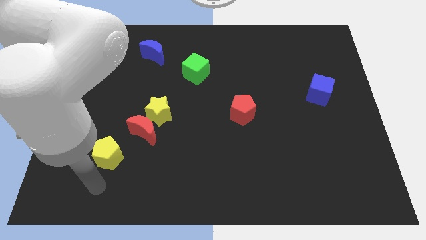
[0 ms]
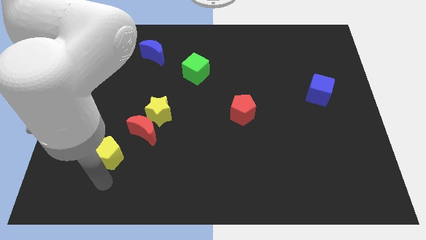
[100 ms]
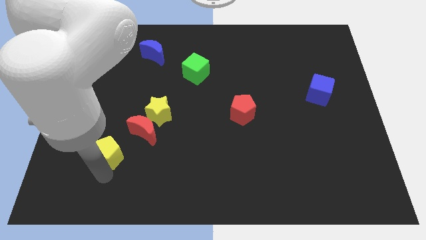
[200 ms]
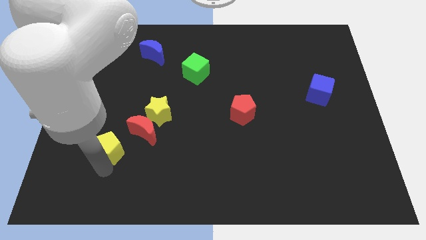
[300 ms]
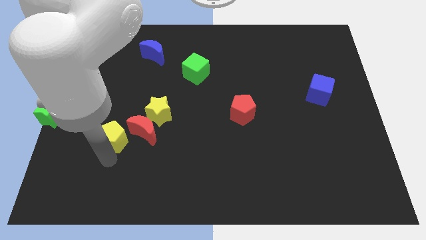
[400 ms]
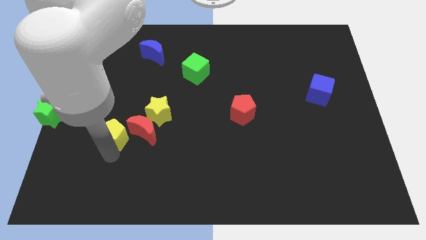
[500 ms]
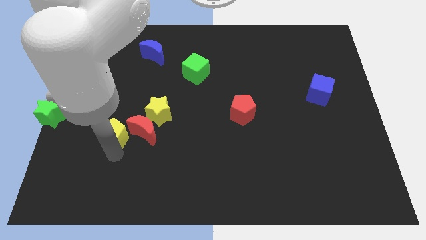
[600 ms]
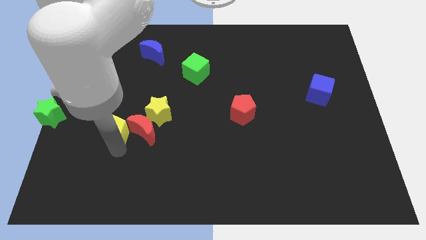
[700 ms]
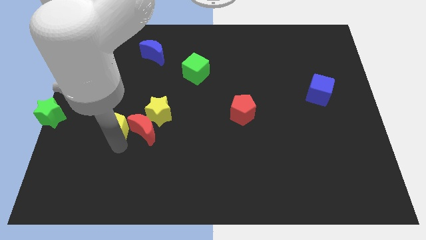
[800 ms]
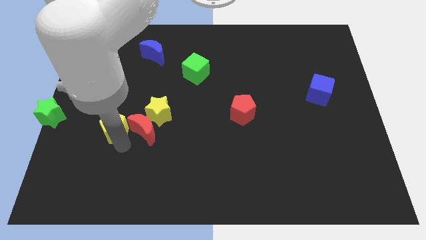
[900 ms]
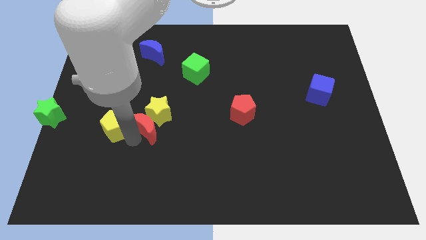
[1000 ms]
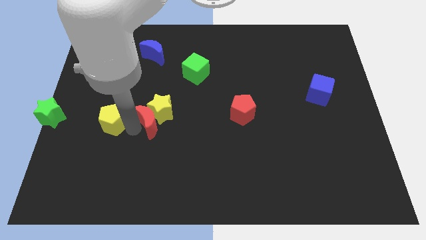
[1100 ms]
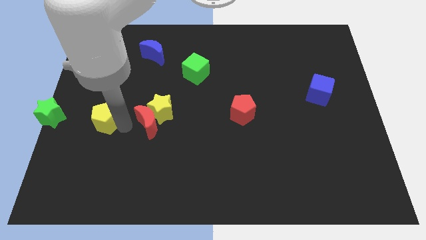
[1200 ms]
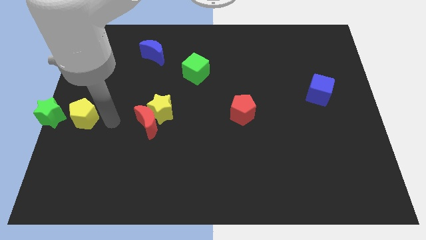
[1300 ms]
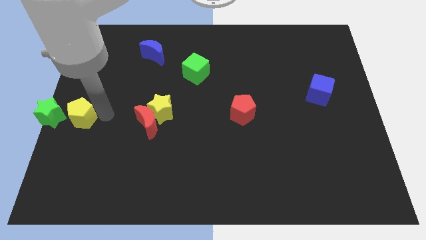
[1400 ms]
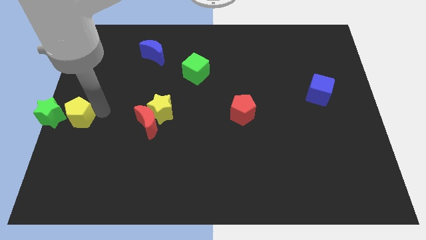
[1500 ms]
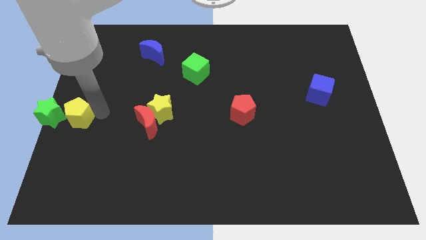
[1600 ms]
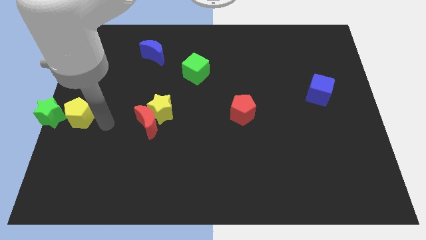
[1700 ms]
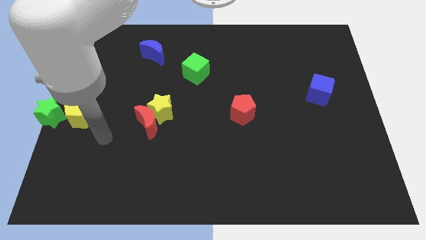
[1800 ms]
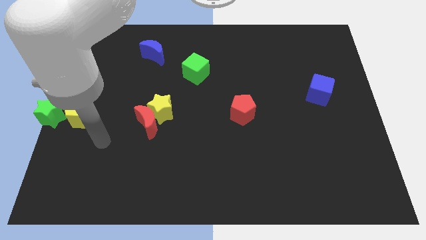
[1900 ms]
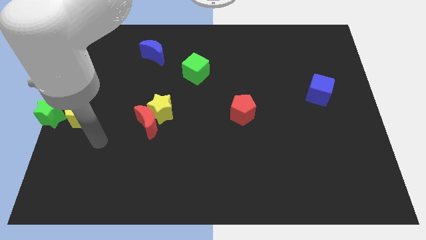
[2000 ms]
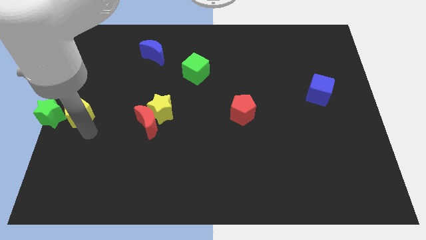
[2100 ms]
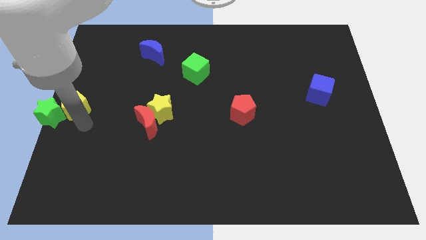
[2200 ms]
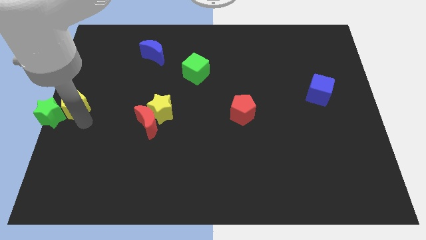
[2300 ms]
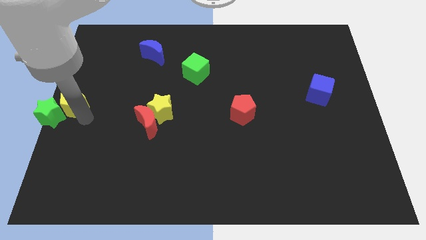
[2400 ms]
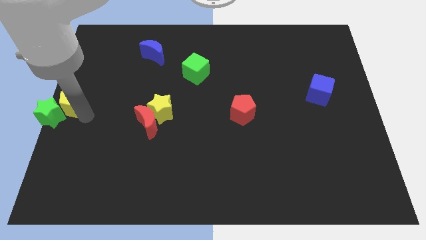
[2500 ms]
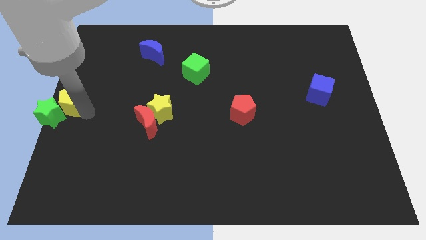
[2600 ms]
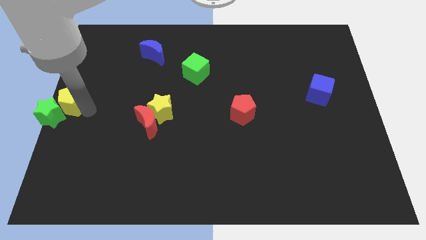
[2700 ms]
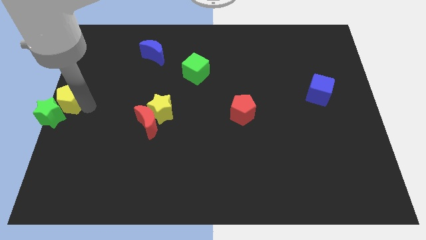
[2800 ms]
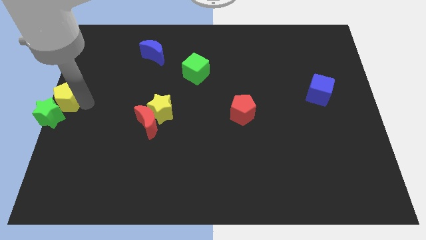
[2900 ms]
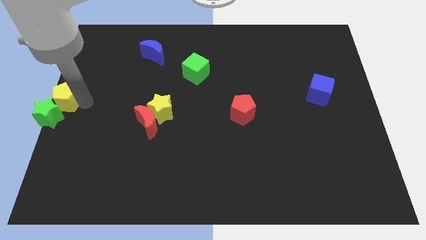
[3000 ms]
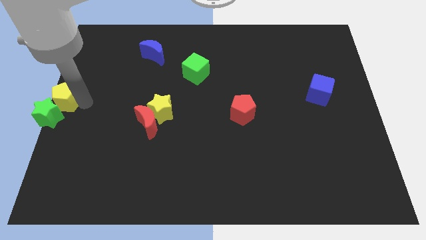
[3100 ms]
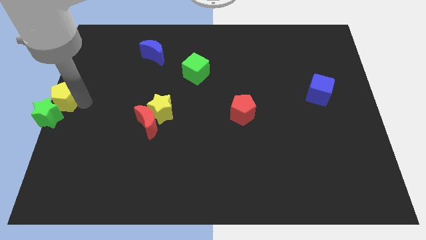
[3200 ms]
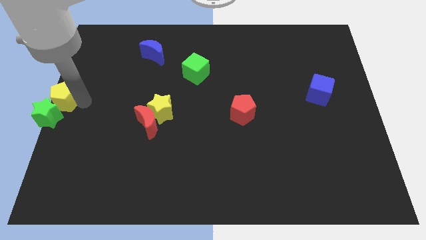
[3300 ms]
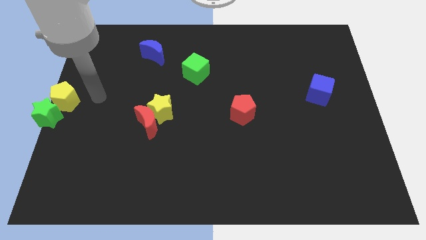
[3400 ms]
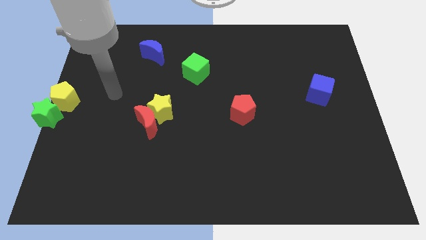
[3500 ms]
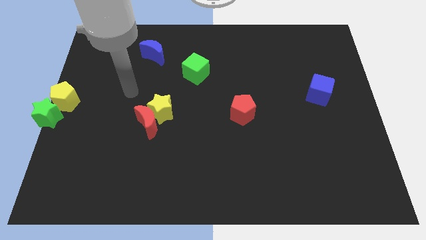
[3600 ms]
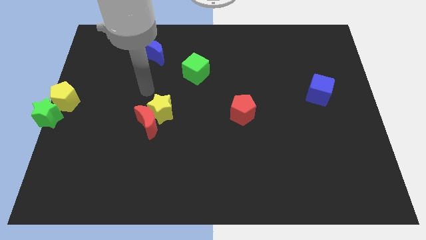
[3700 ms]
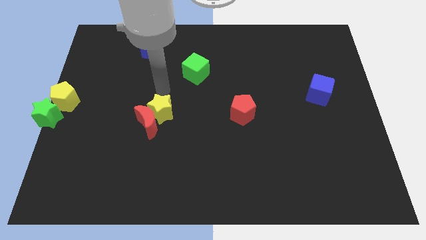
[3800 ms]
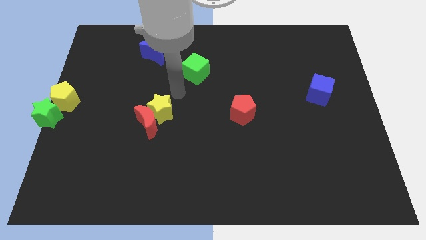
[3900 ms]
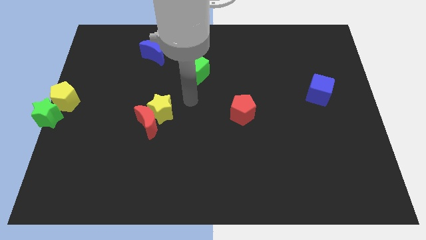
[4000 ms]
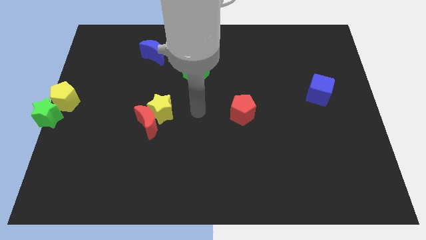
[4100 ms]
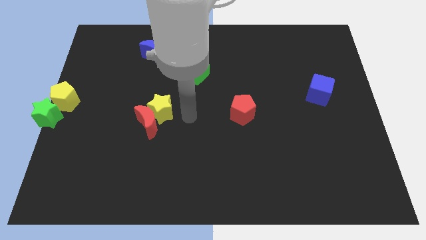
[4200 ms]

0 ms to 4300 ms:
push the yellow pentagon into the green star

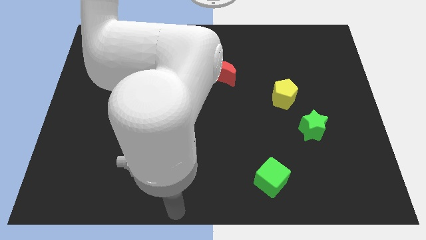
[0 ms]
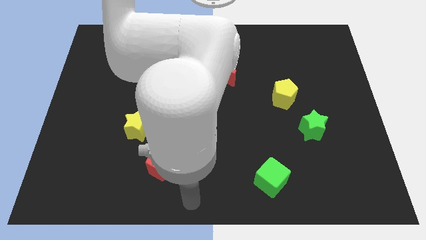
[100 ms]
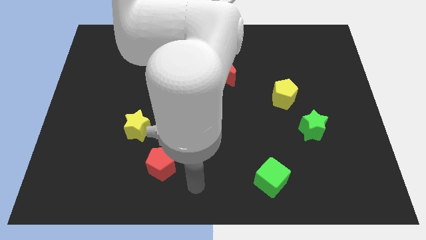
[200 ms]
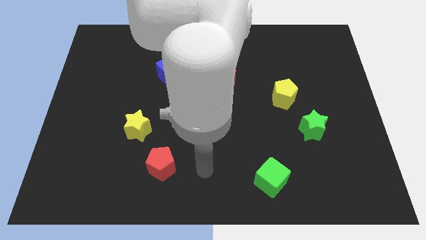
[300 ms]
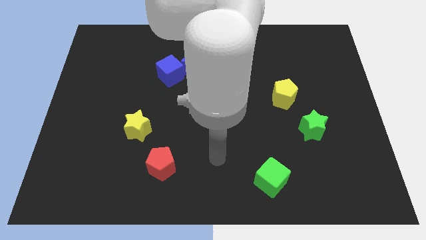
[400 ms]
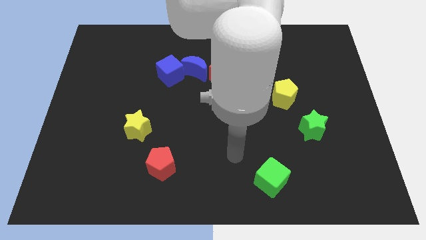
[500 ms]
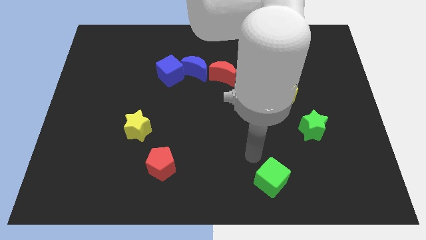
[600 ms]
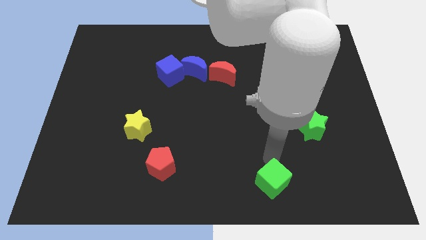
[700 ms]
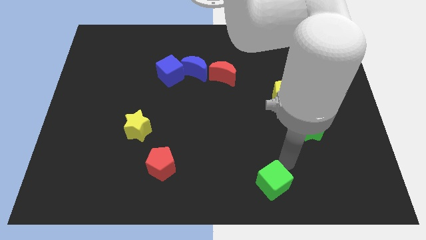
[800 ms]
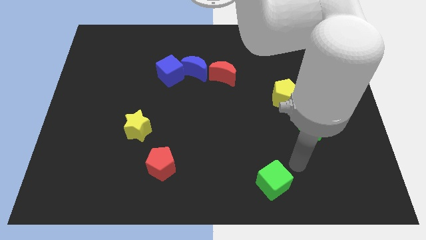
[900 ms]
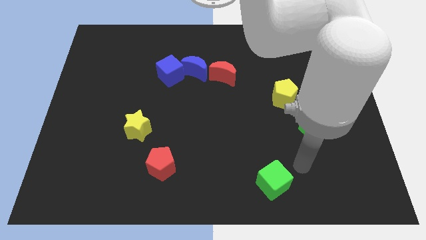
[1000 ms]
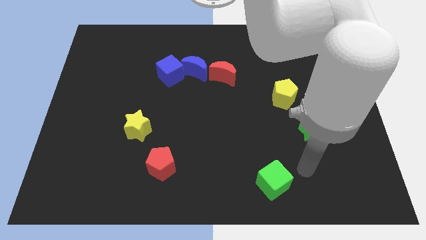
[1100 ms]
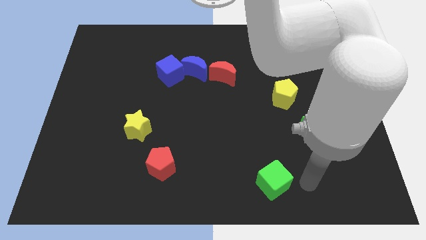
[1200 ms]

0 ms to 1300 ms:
slide the arm to the right of green cube

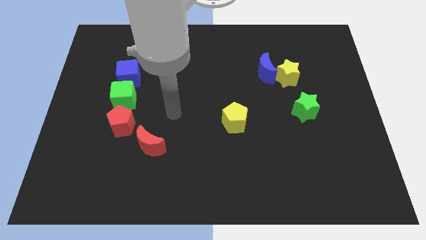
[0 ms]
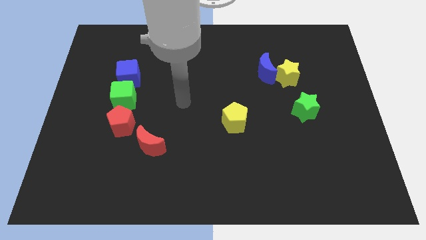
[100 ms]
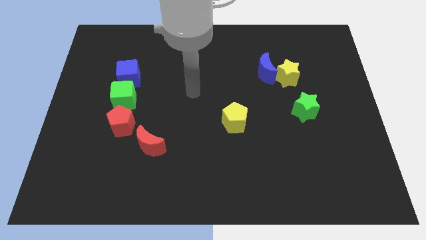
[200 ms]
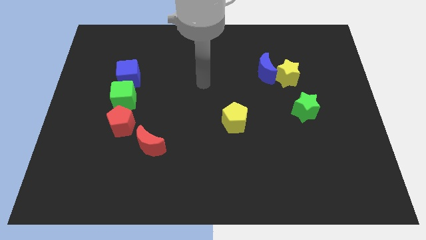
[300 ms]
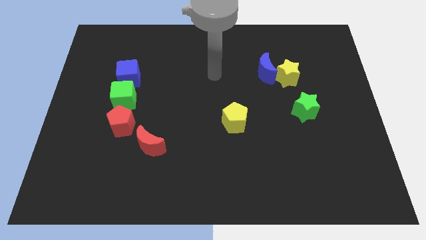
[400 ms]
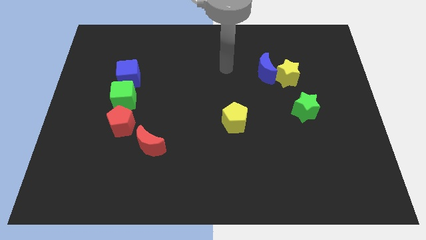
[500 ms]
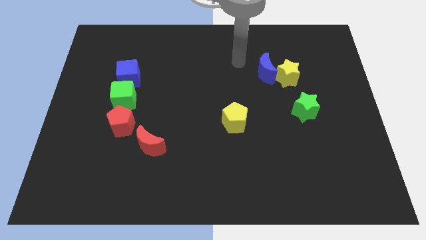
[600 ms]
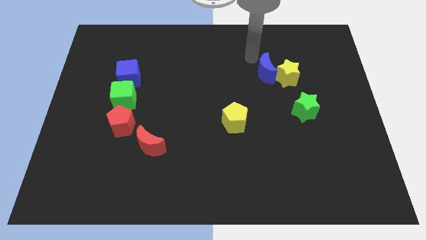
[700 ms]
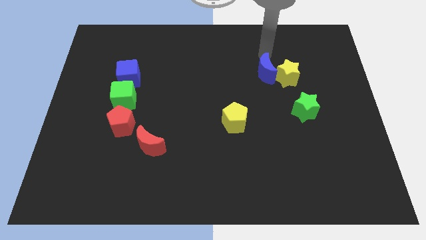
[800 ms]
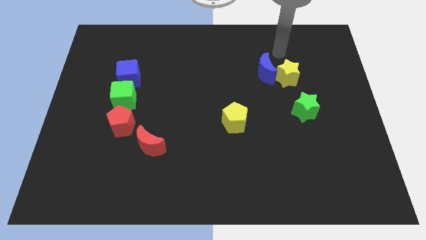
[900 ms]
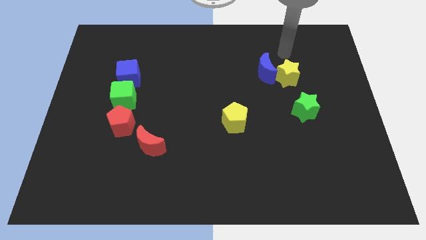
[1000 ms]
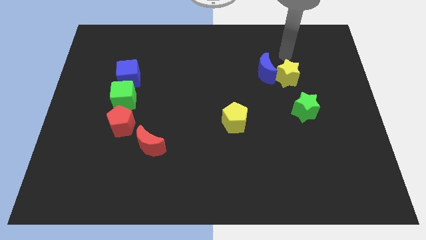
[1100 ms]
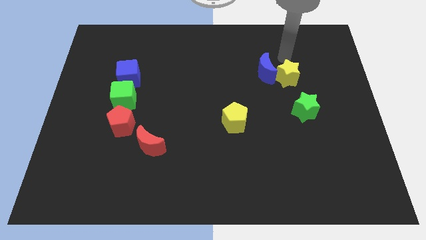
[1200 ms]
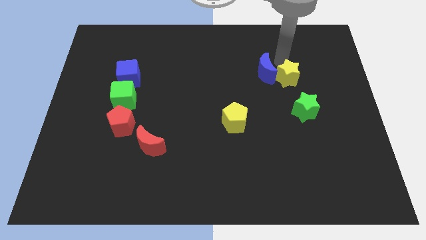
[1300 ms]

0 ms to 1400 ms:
move your arm to the top of yellow star

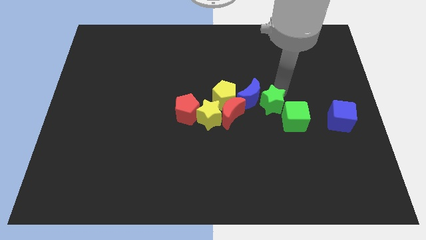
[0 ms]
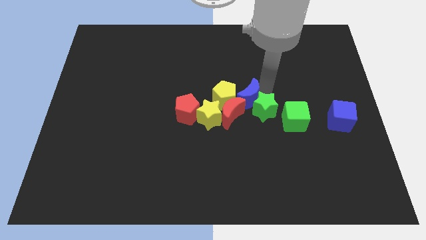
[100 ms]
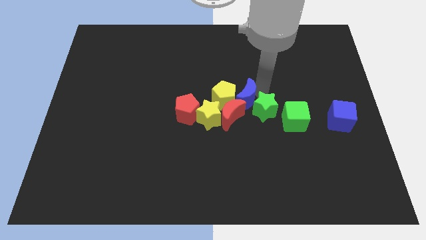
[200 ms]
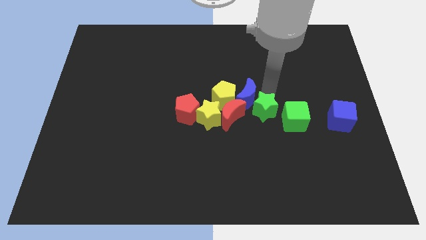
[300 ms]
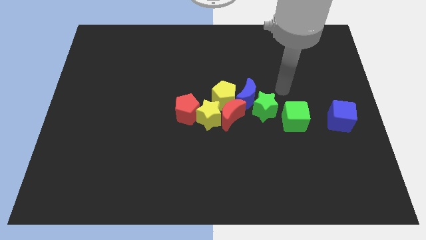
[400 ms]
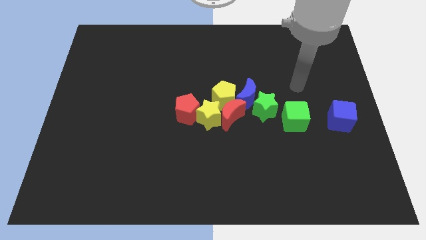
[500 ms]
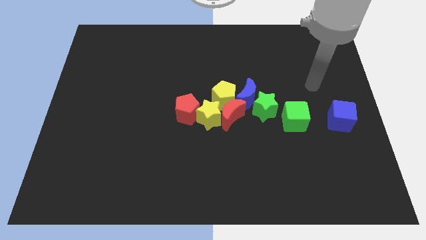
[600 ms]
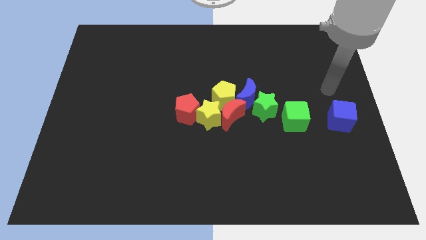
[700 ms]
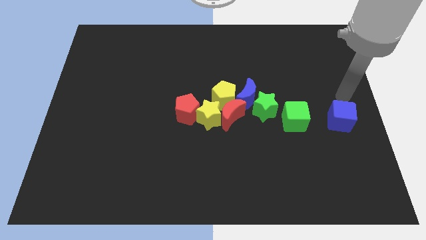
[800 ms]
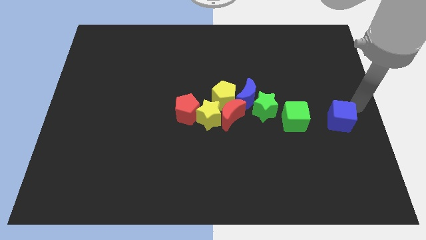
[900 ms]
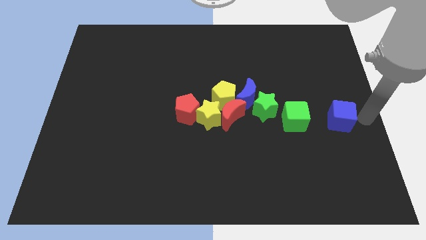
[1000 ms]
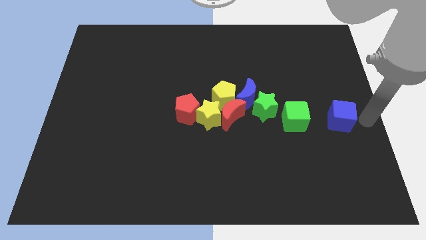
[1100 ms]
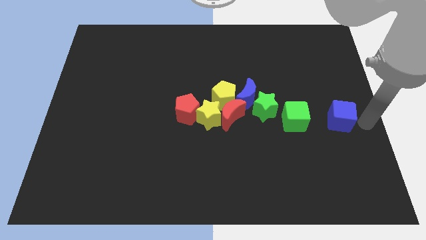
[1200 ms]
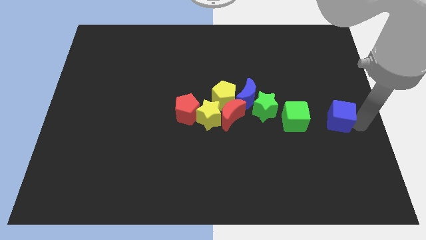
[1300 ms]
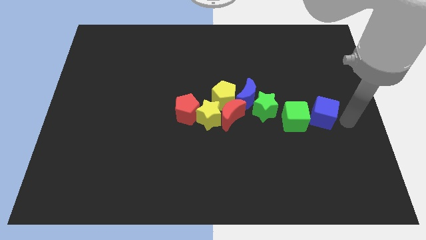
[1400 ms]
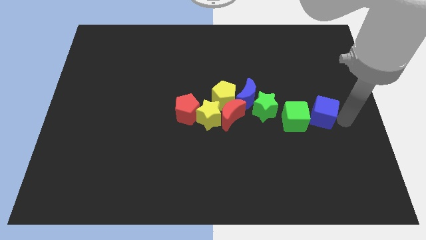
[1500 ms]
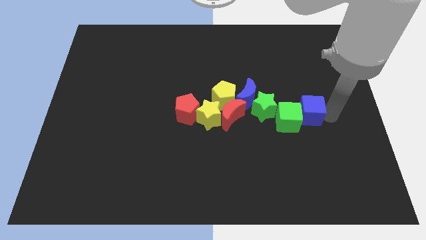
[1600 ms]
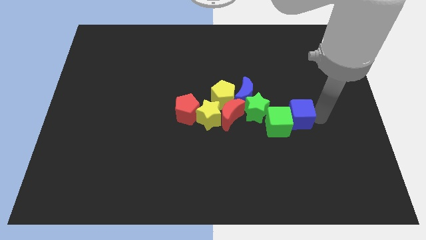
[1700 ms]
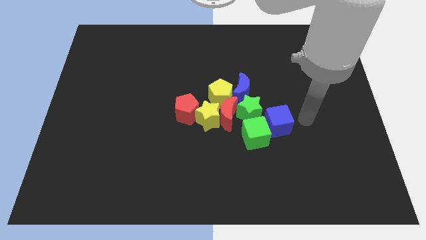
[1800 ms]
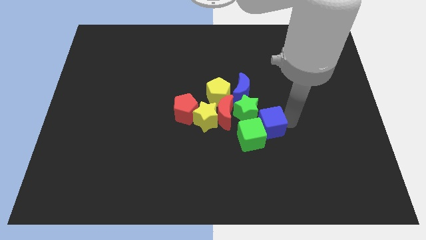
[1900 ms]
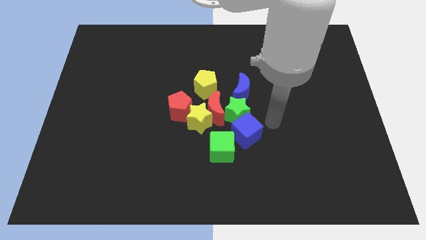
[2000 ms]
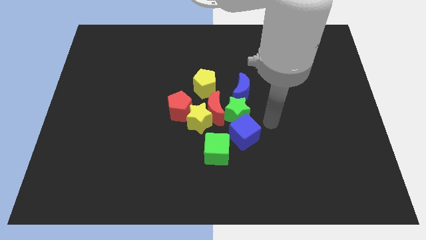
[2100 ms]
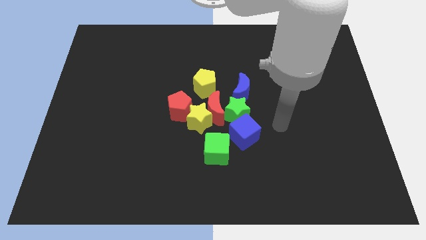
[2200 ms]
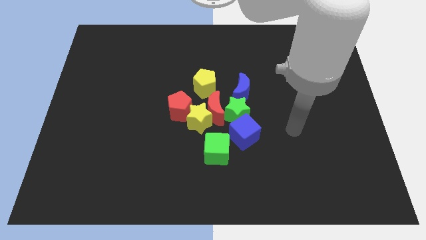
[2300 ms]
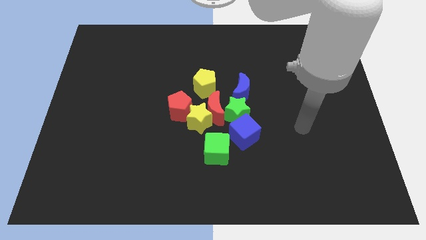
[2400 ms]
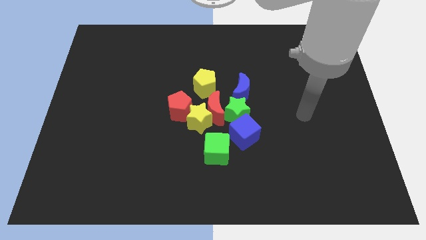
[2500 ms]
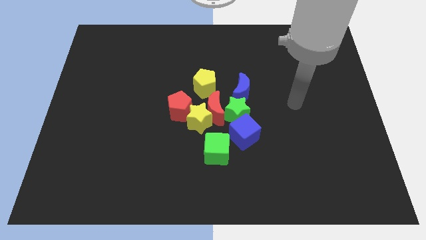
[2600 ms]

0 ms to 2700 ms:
push the blue cube into the green cube
